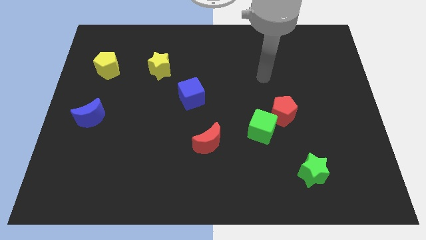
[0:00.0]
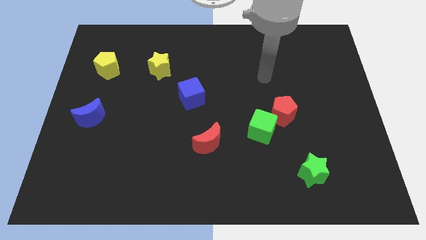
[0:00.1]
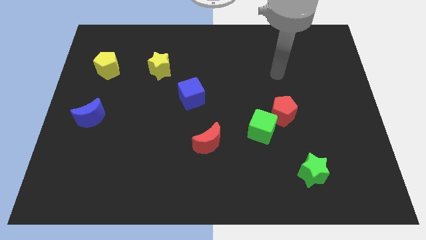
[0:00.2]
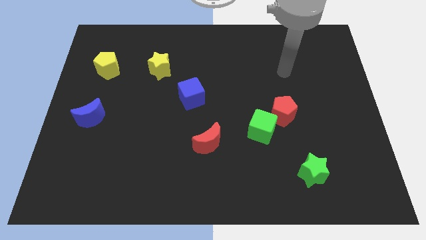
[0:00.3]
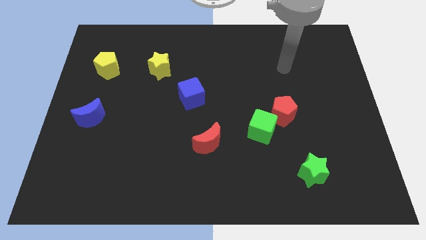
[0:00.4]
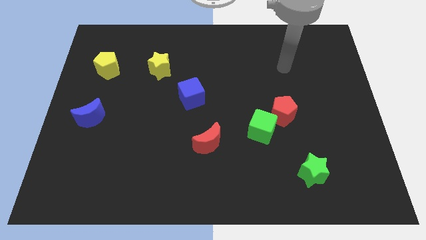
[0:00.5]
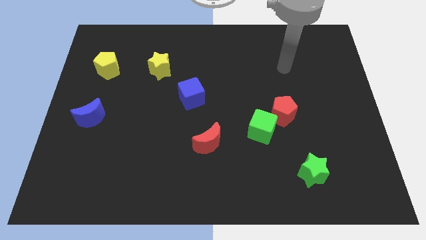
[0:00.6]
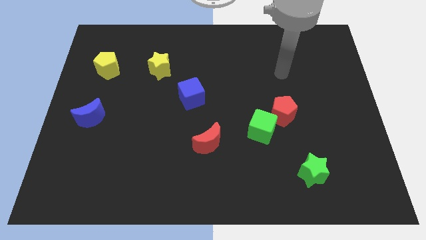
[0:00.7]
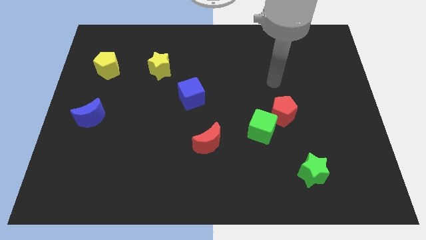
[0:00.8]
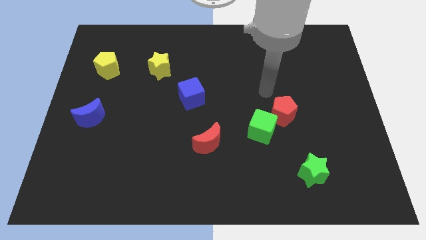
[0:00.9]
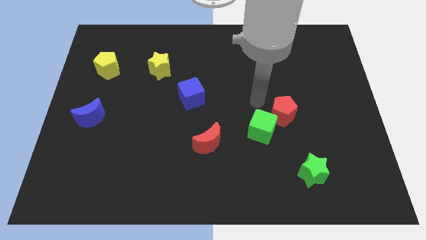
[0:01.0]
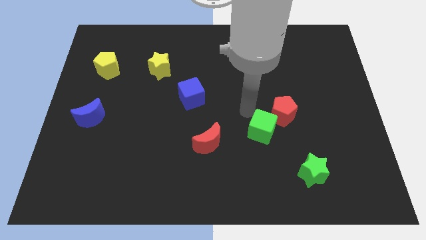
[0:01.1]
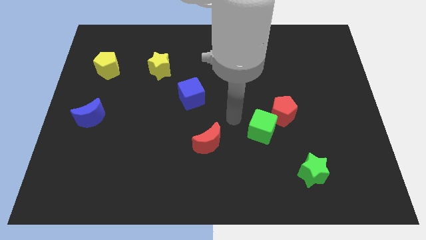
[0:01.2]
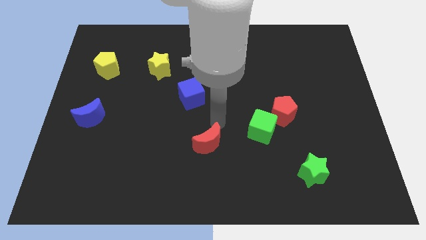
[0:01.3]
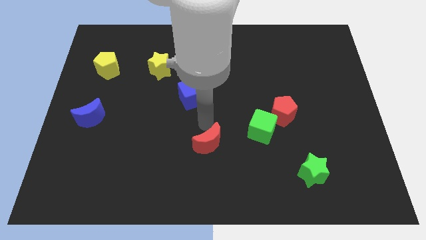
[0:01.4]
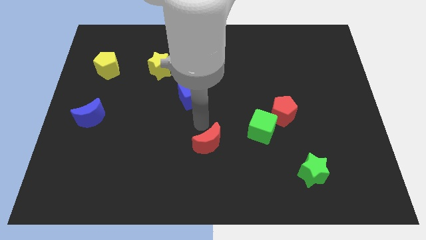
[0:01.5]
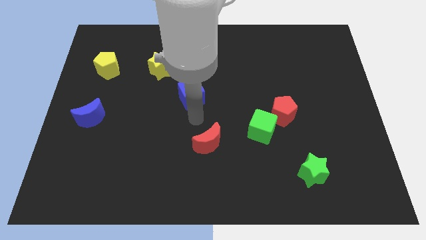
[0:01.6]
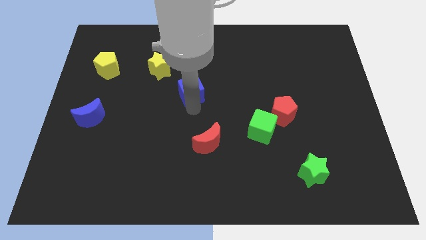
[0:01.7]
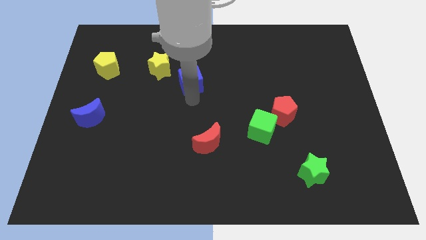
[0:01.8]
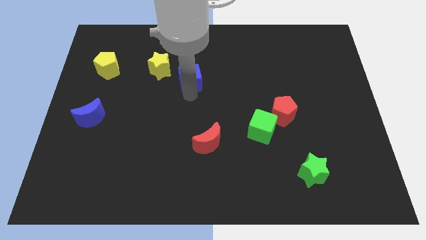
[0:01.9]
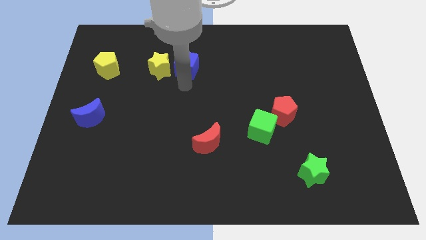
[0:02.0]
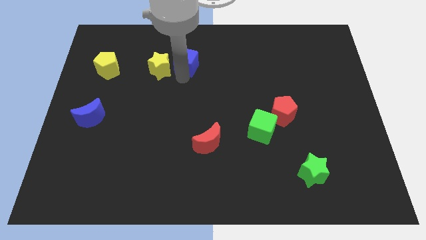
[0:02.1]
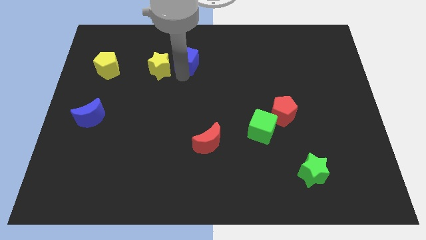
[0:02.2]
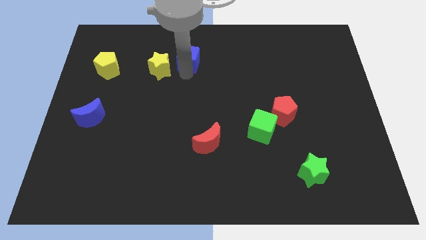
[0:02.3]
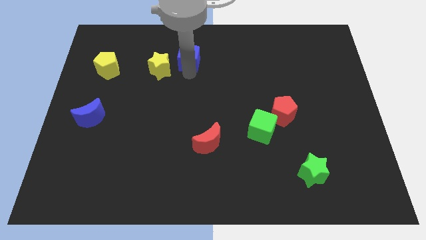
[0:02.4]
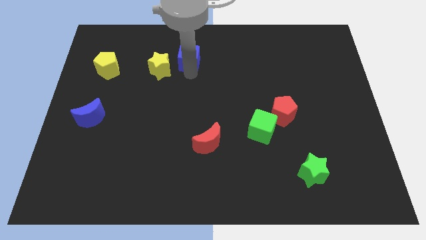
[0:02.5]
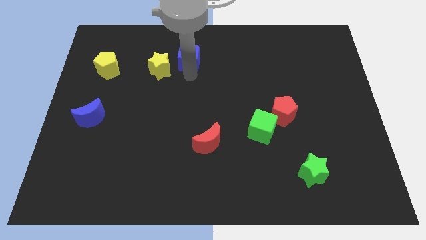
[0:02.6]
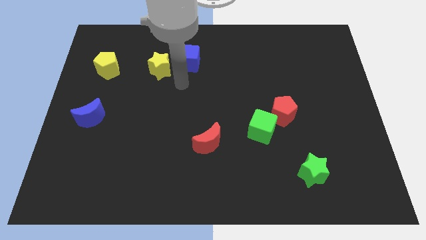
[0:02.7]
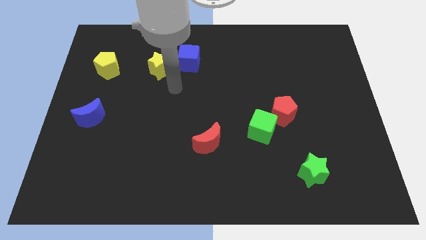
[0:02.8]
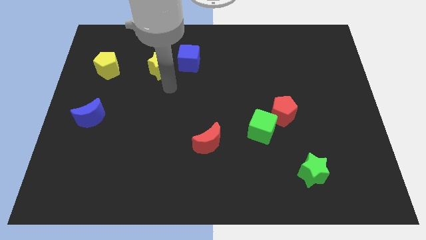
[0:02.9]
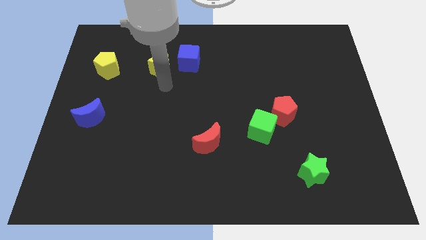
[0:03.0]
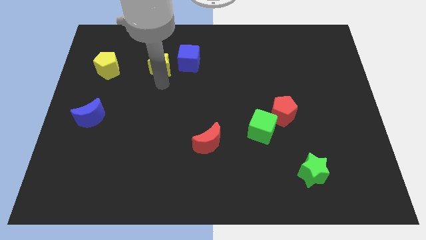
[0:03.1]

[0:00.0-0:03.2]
slightly push the blue cube to the top of the board

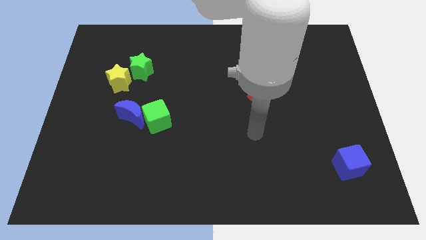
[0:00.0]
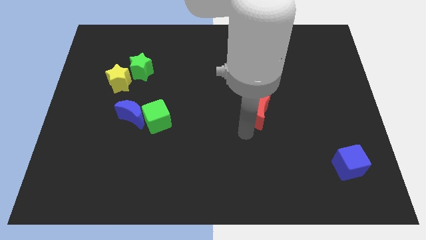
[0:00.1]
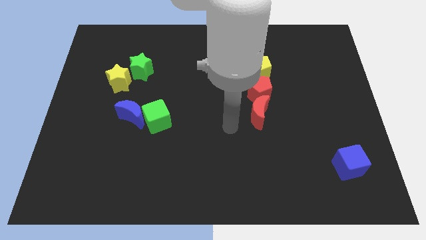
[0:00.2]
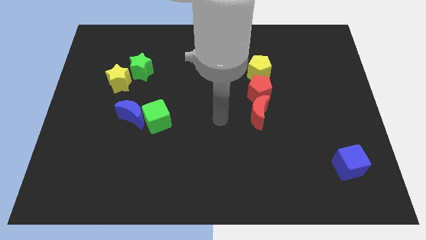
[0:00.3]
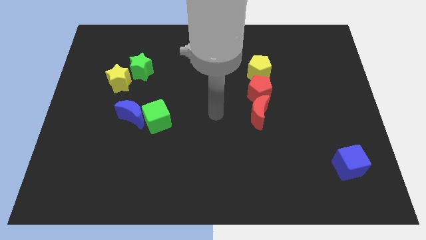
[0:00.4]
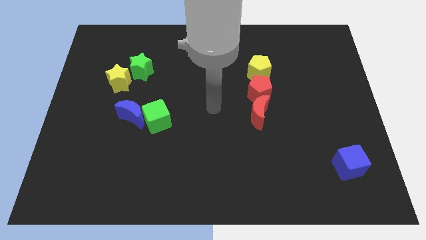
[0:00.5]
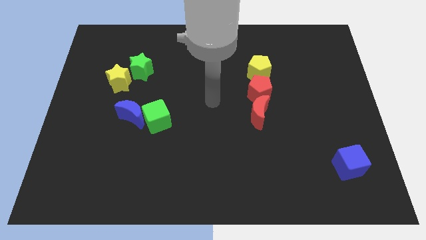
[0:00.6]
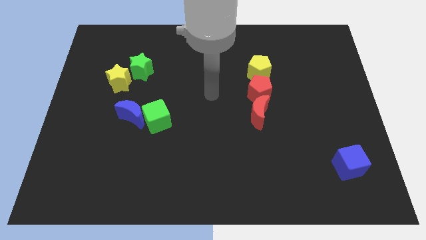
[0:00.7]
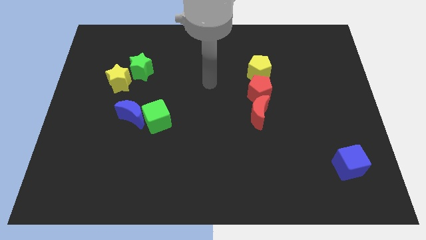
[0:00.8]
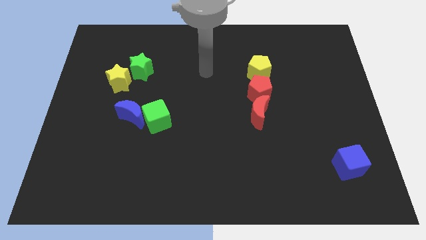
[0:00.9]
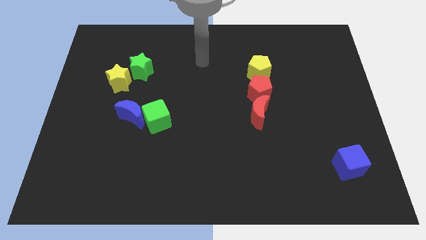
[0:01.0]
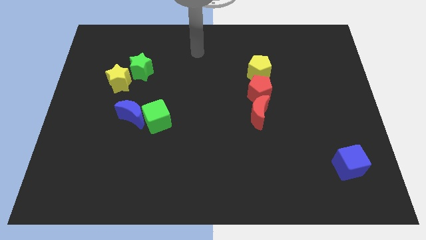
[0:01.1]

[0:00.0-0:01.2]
move your arm towards the center top of the board

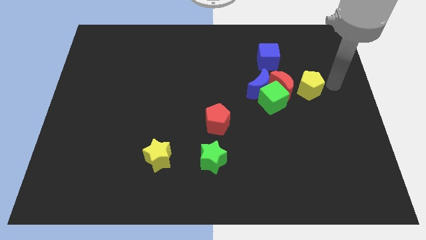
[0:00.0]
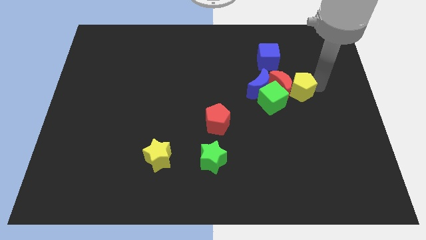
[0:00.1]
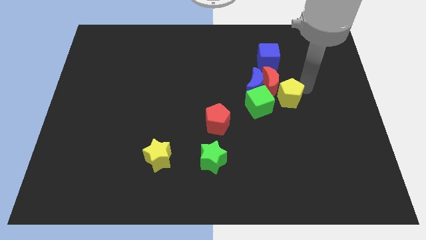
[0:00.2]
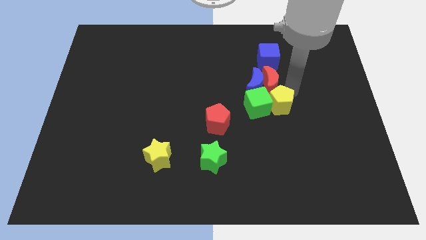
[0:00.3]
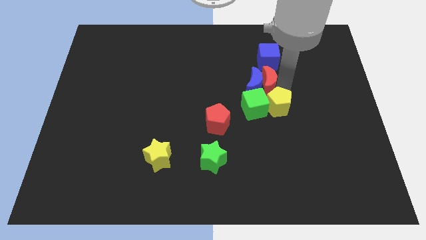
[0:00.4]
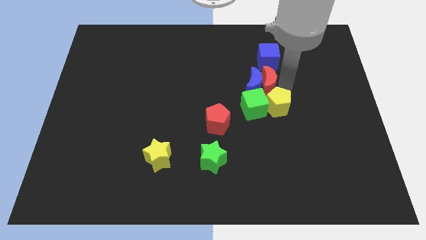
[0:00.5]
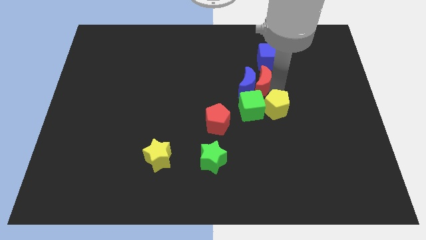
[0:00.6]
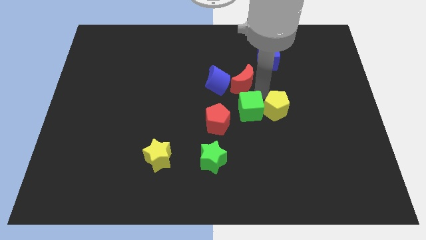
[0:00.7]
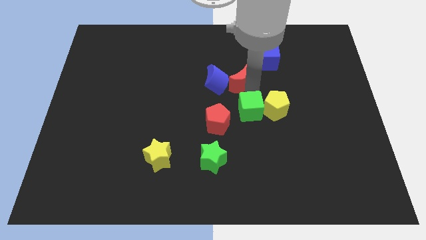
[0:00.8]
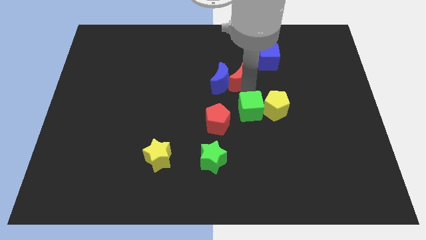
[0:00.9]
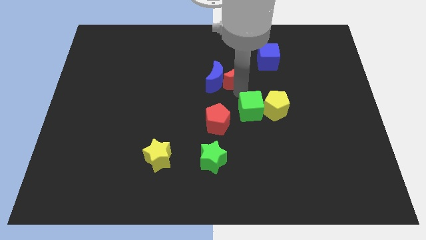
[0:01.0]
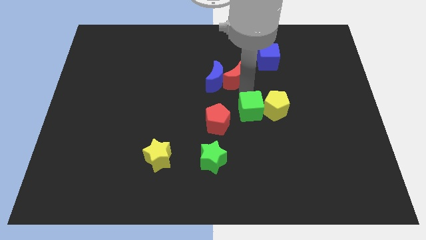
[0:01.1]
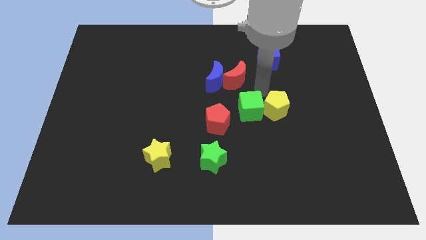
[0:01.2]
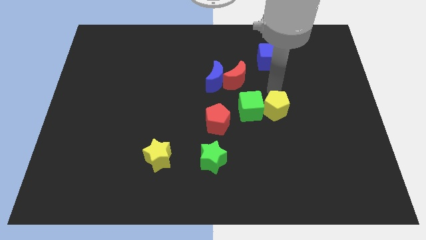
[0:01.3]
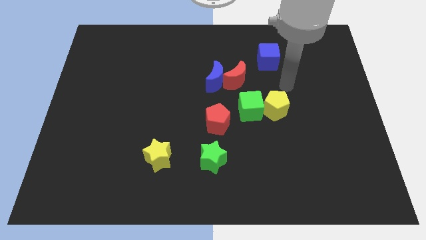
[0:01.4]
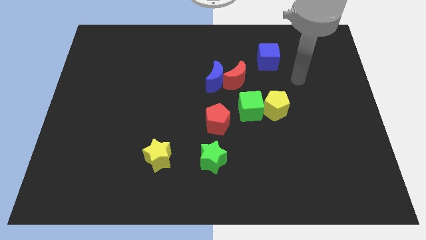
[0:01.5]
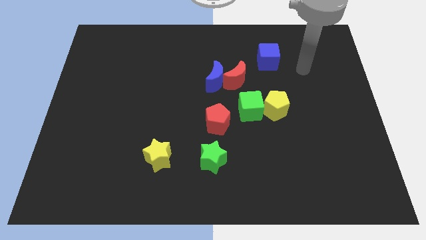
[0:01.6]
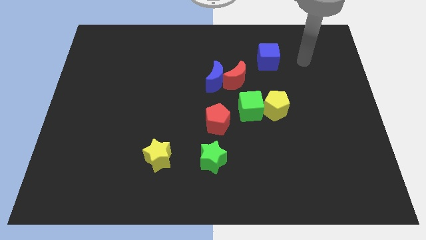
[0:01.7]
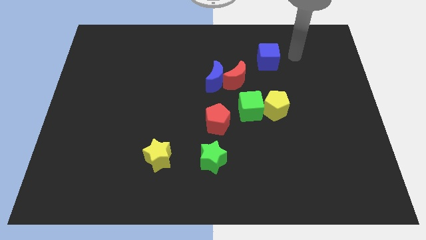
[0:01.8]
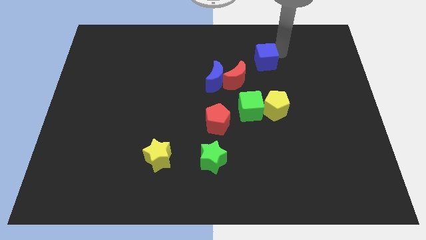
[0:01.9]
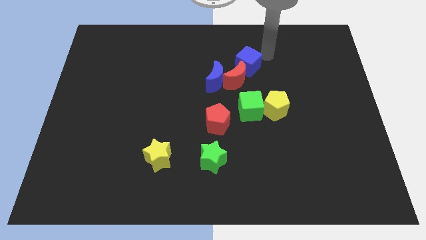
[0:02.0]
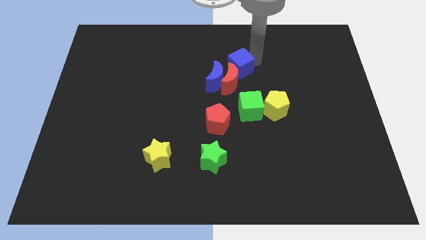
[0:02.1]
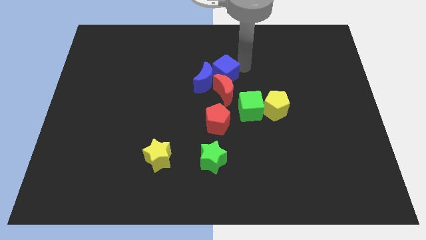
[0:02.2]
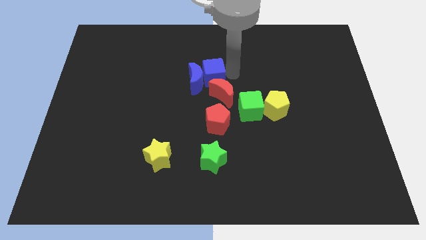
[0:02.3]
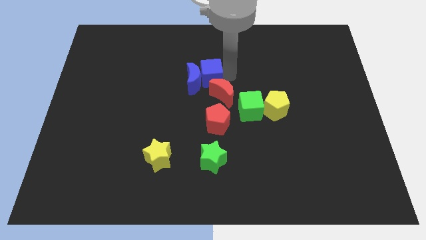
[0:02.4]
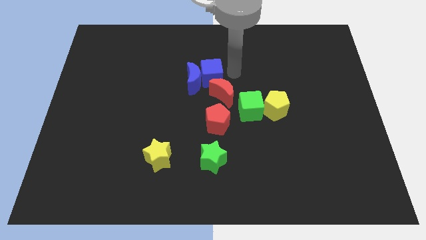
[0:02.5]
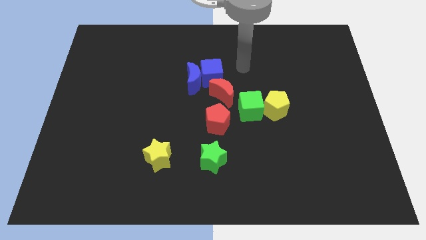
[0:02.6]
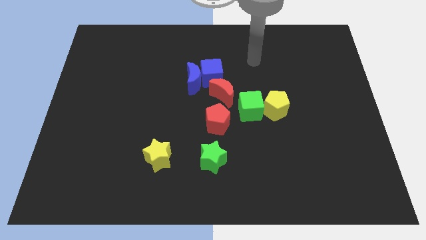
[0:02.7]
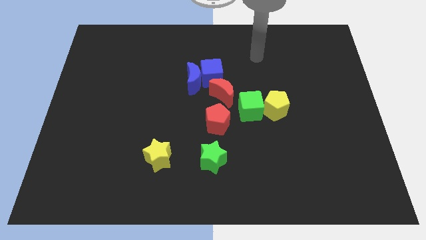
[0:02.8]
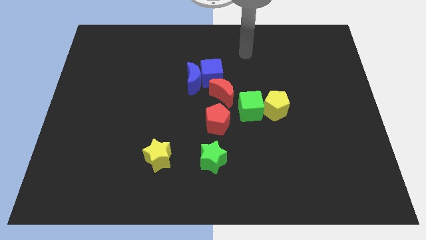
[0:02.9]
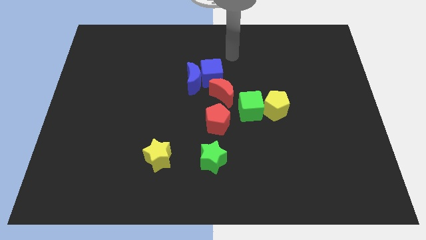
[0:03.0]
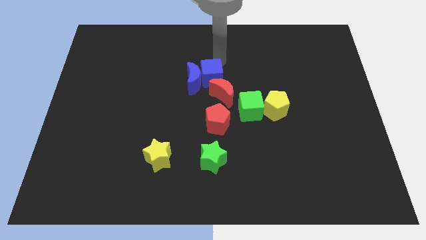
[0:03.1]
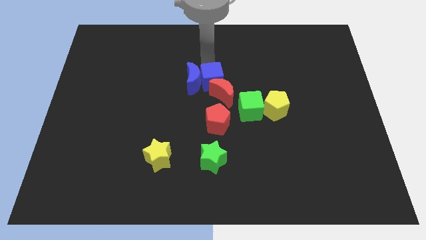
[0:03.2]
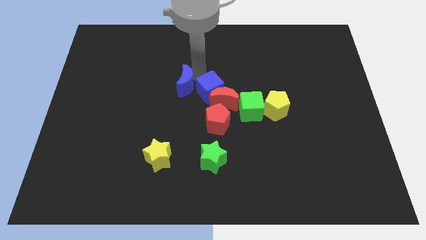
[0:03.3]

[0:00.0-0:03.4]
move blue cube into the blue moon

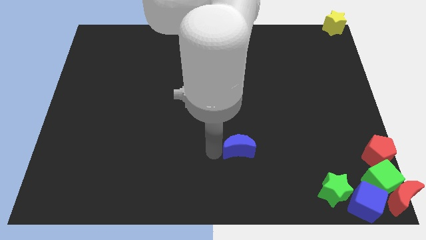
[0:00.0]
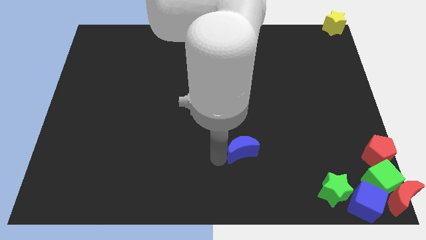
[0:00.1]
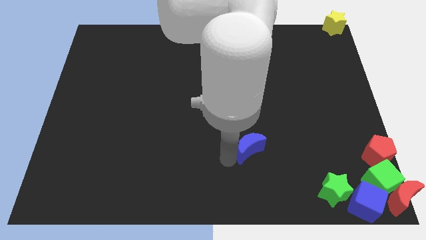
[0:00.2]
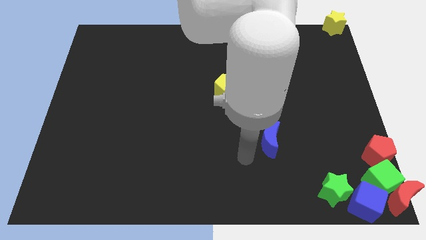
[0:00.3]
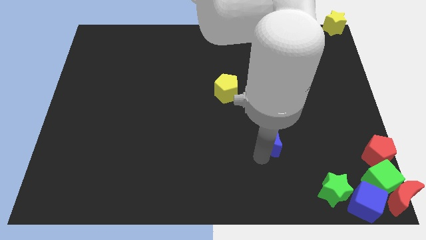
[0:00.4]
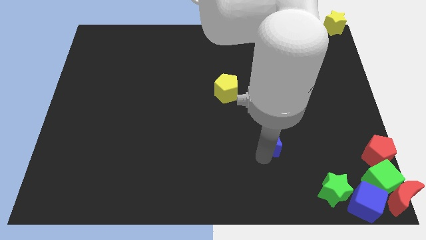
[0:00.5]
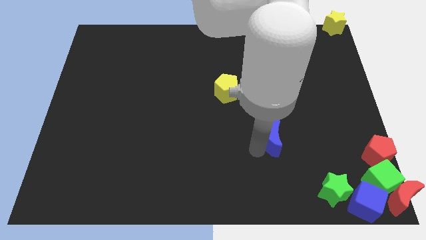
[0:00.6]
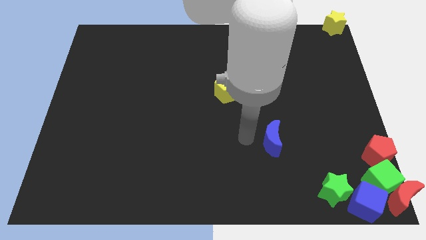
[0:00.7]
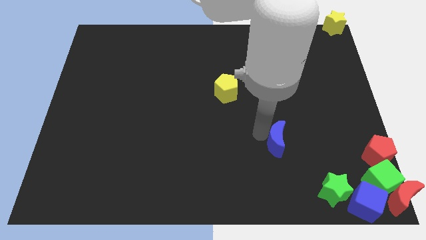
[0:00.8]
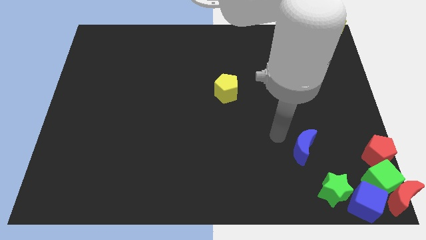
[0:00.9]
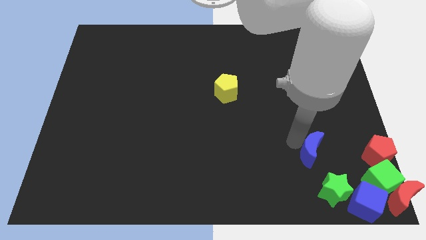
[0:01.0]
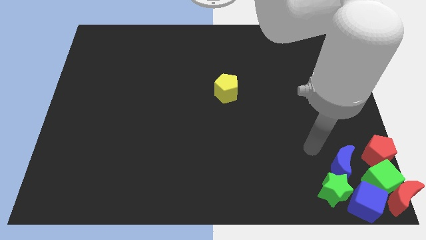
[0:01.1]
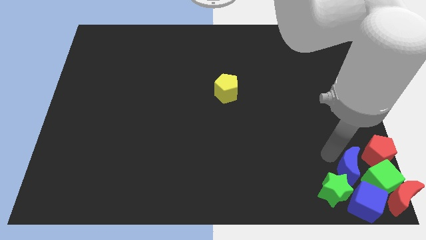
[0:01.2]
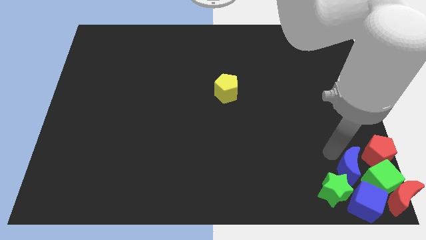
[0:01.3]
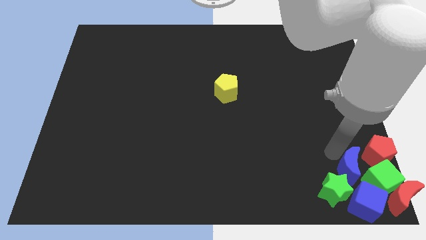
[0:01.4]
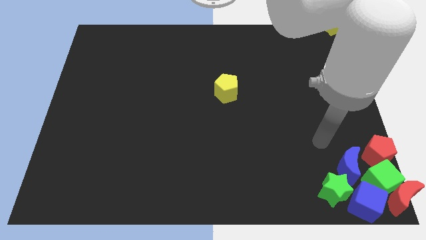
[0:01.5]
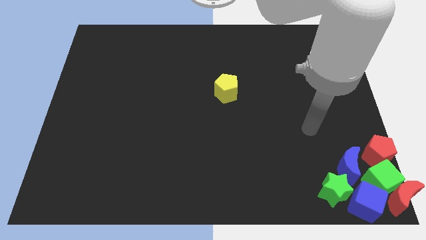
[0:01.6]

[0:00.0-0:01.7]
move the blue moon into the group of blocks
